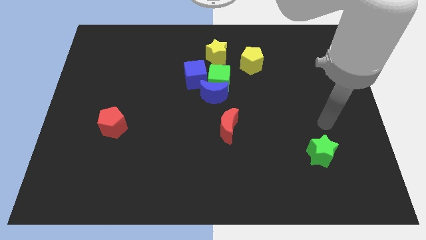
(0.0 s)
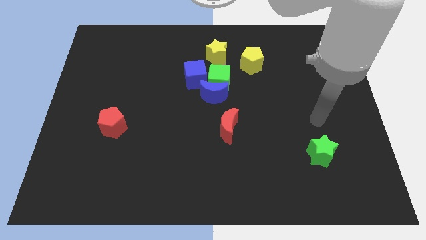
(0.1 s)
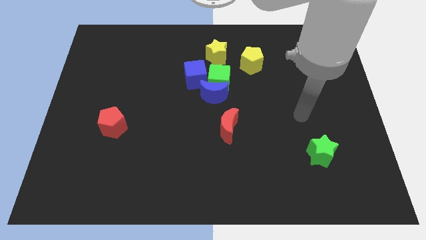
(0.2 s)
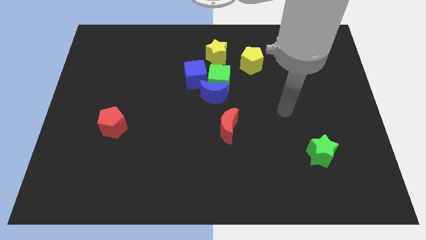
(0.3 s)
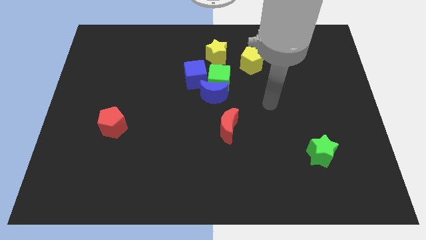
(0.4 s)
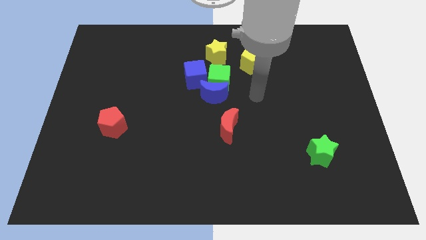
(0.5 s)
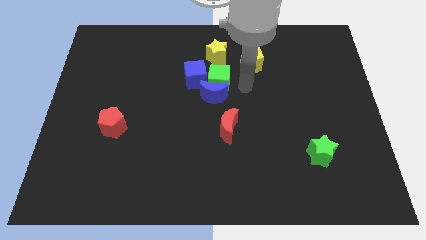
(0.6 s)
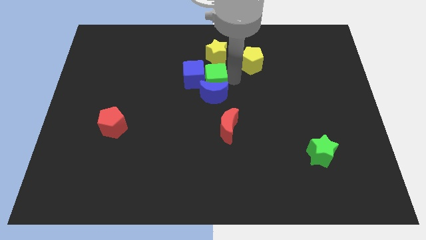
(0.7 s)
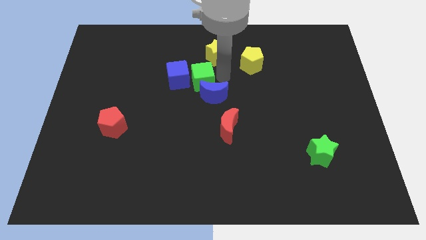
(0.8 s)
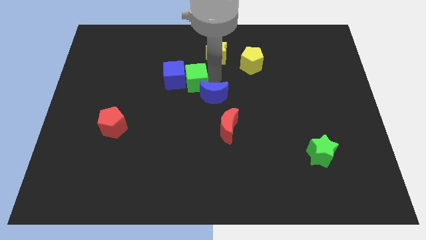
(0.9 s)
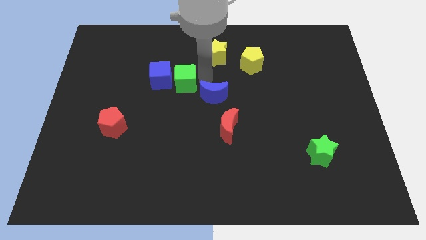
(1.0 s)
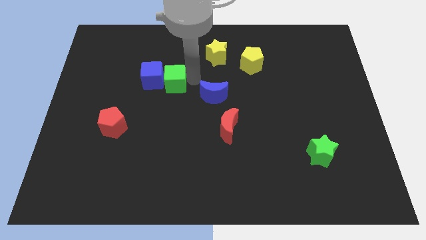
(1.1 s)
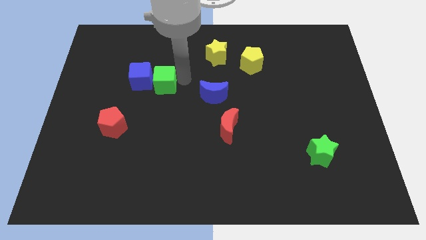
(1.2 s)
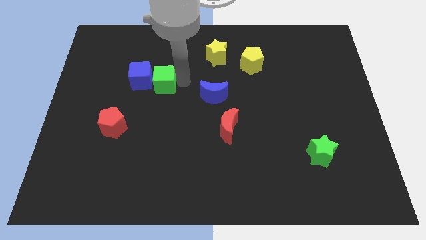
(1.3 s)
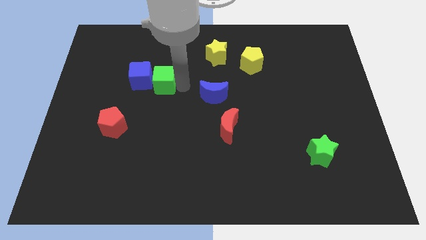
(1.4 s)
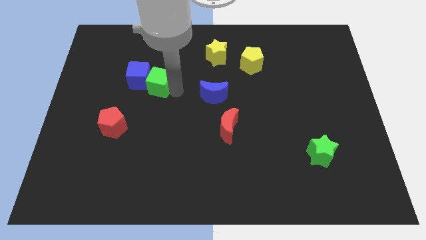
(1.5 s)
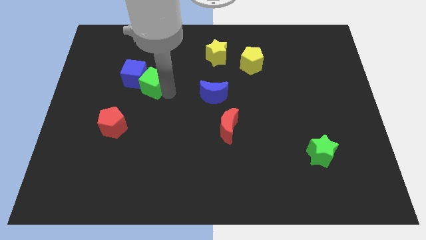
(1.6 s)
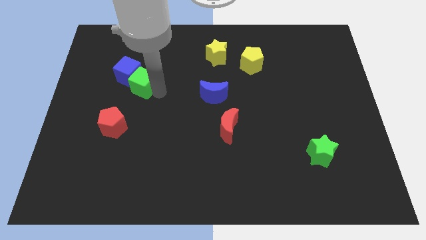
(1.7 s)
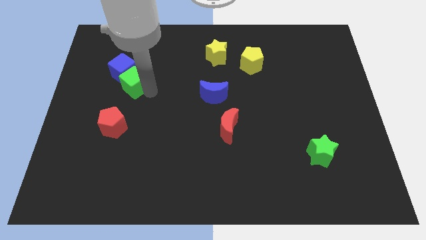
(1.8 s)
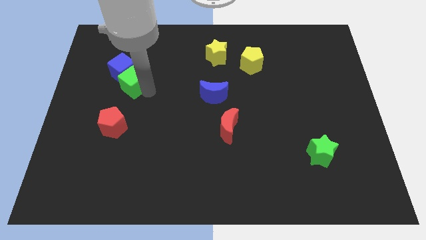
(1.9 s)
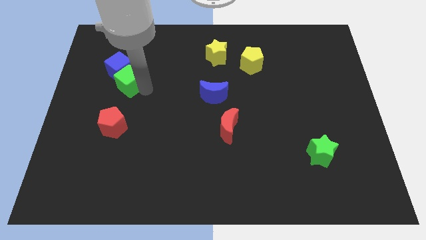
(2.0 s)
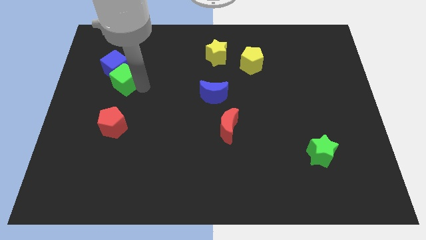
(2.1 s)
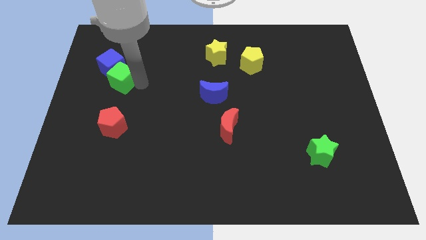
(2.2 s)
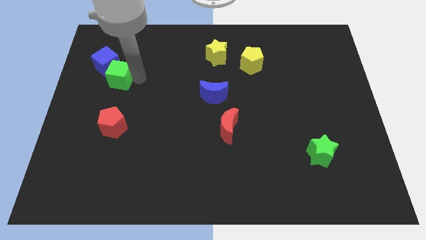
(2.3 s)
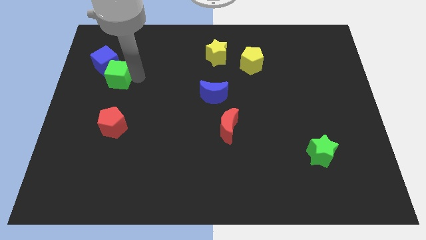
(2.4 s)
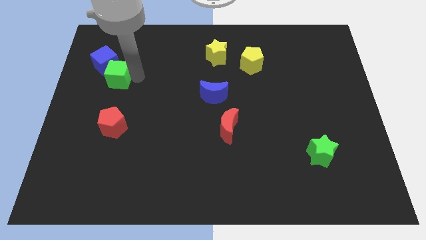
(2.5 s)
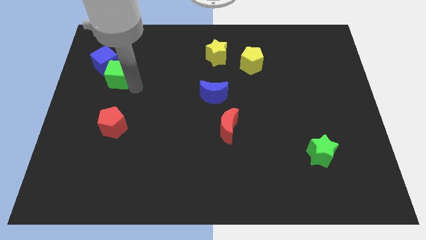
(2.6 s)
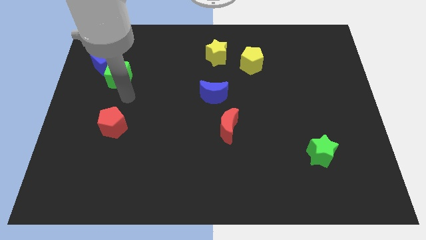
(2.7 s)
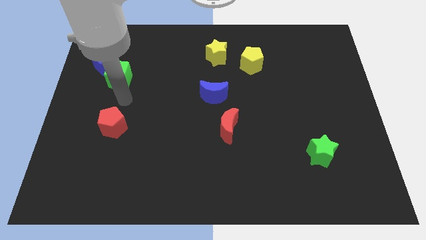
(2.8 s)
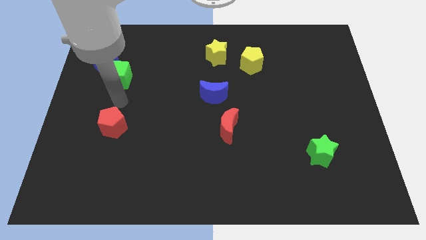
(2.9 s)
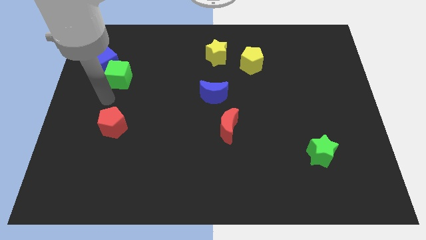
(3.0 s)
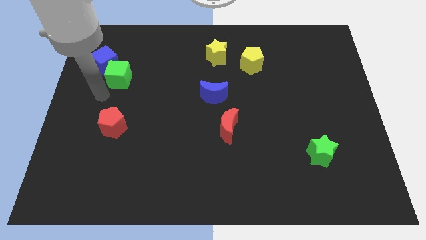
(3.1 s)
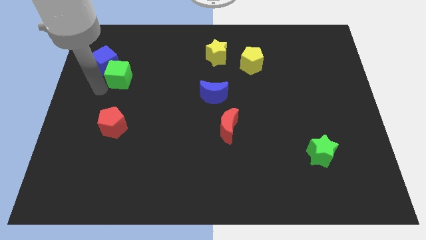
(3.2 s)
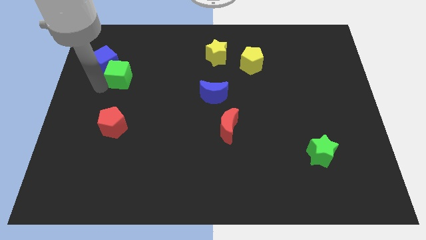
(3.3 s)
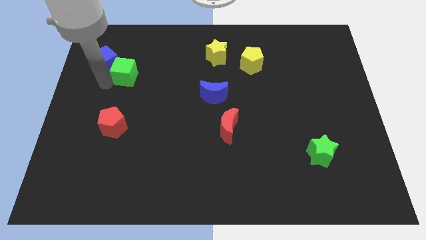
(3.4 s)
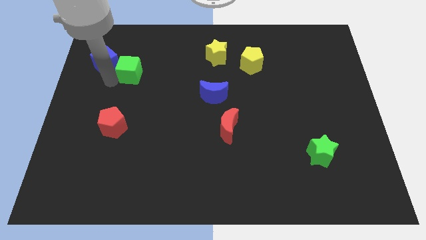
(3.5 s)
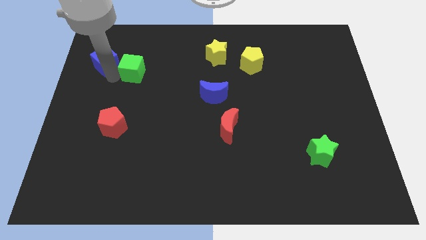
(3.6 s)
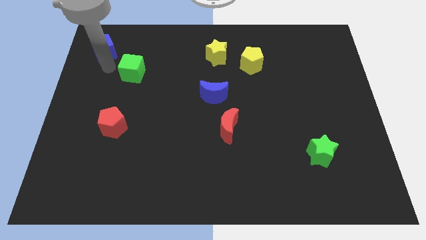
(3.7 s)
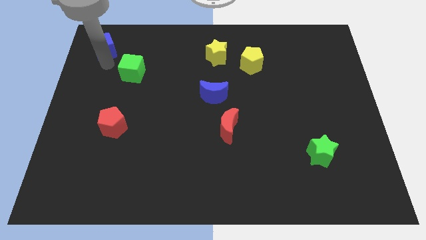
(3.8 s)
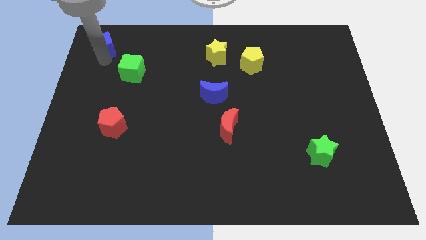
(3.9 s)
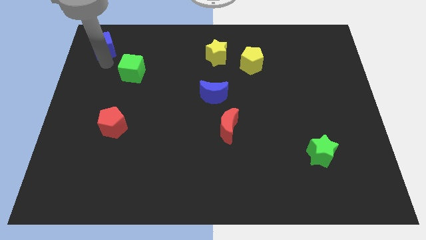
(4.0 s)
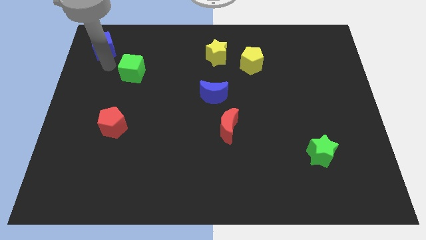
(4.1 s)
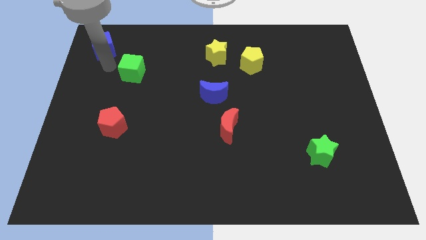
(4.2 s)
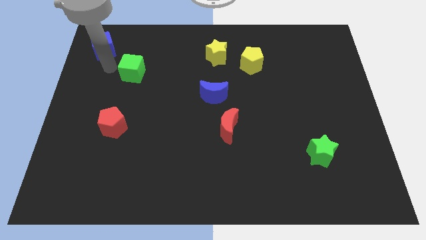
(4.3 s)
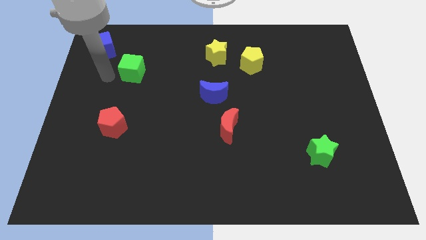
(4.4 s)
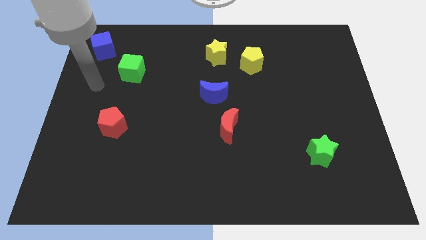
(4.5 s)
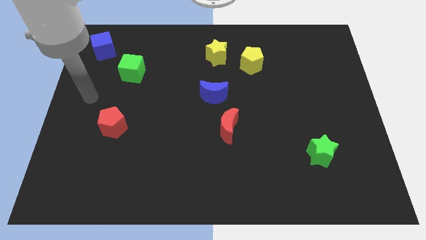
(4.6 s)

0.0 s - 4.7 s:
separate the green cube and the blue cube

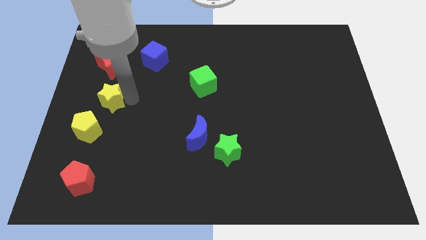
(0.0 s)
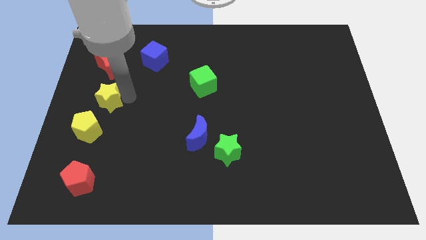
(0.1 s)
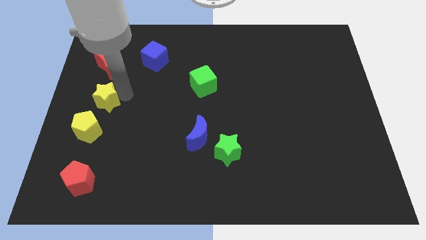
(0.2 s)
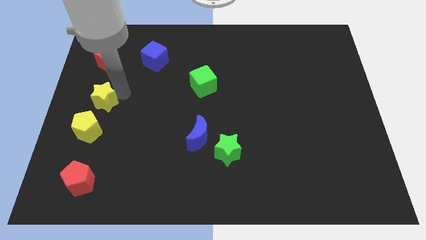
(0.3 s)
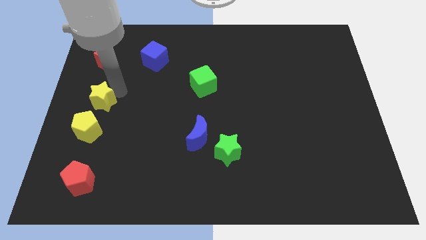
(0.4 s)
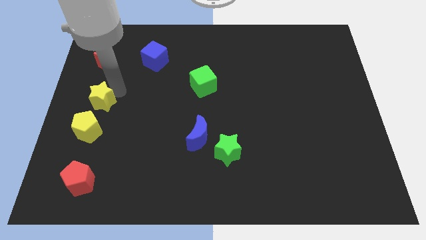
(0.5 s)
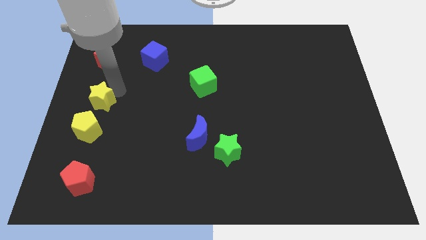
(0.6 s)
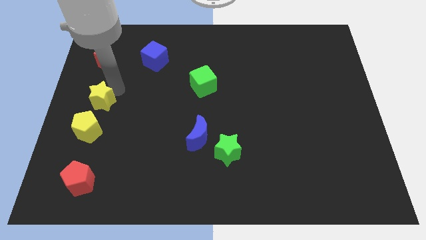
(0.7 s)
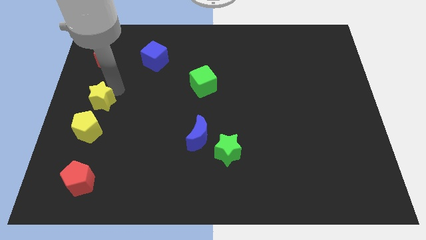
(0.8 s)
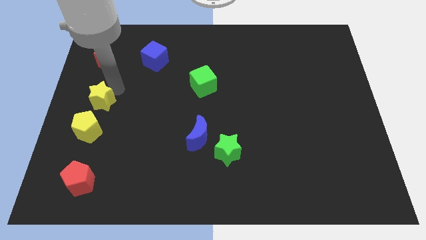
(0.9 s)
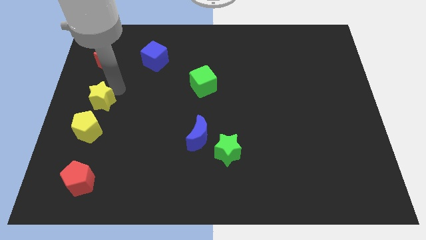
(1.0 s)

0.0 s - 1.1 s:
slightly push the yellow star above the yellow pentagon

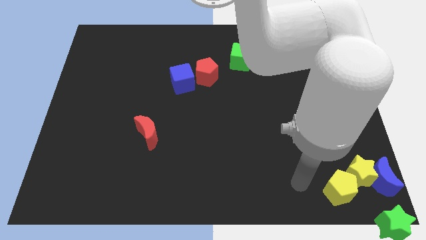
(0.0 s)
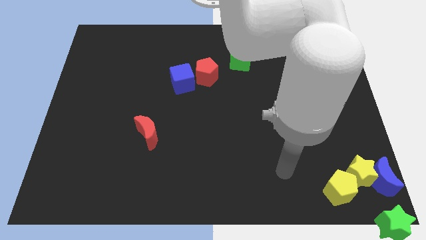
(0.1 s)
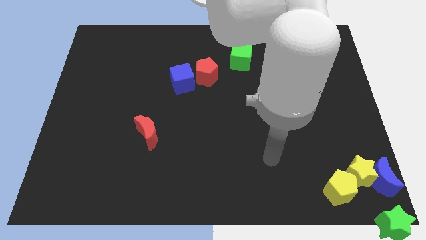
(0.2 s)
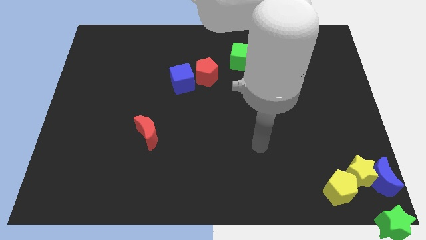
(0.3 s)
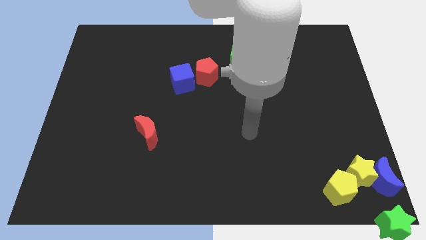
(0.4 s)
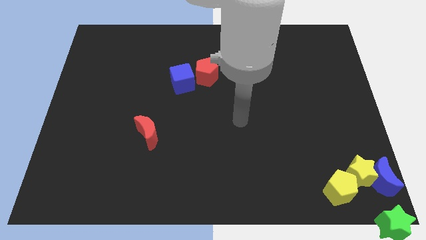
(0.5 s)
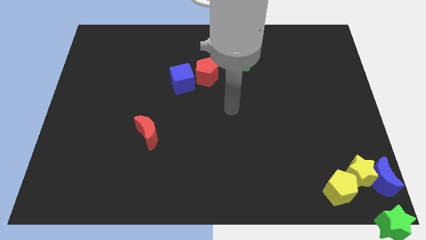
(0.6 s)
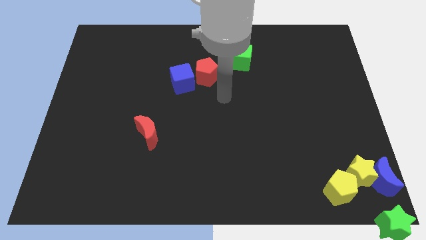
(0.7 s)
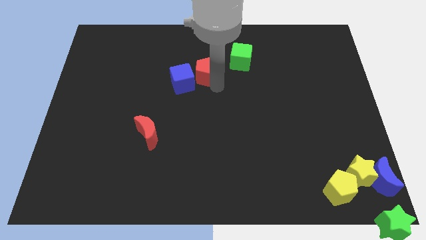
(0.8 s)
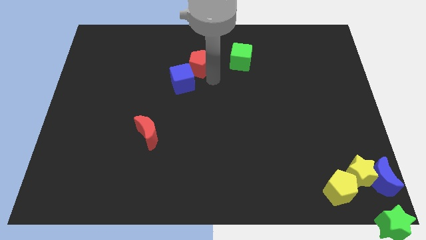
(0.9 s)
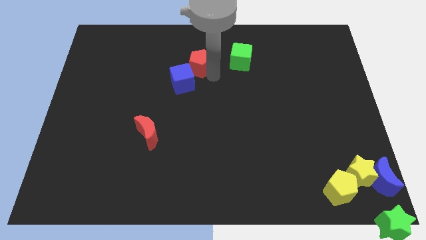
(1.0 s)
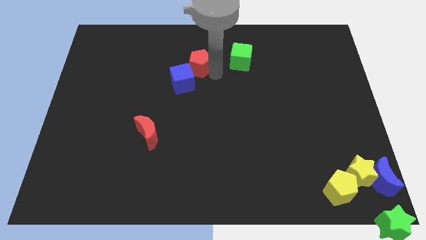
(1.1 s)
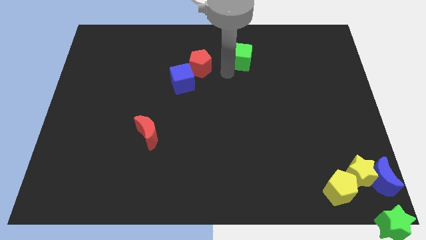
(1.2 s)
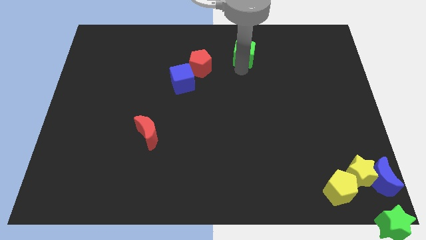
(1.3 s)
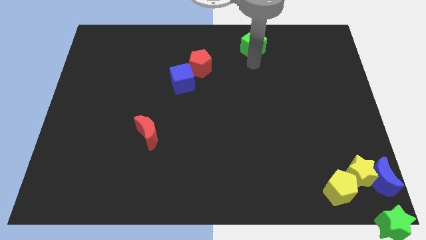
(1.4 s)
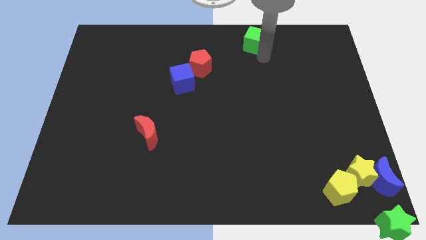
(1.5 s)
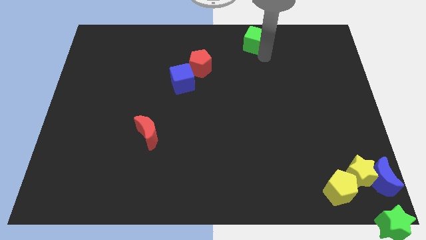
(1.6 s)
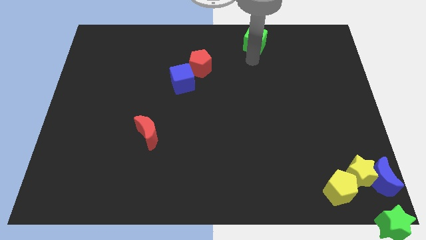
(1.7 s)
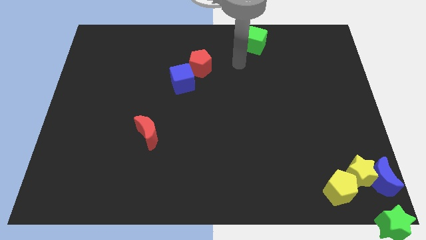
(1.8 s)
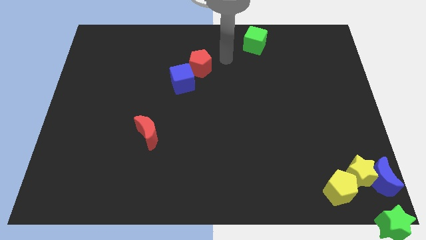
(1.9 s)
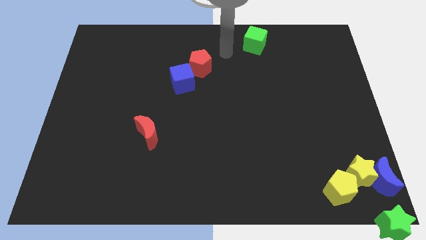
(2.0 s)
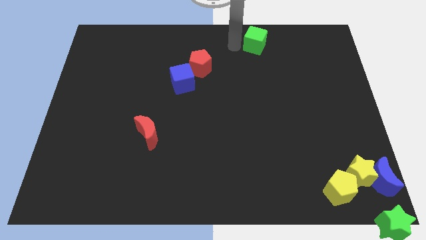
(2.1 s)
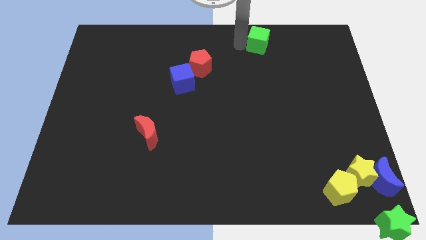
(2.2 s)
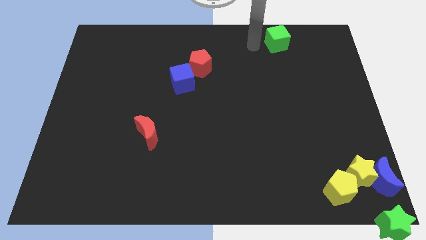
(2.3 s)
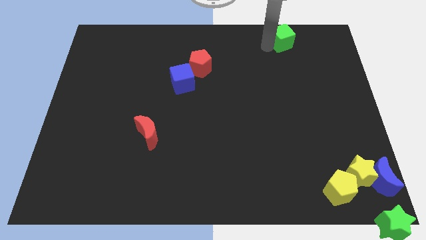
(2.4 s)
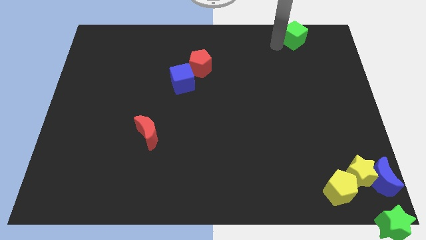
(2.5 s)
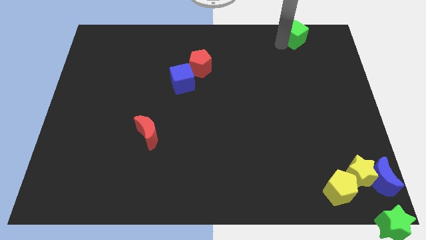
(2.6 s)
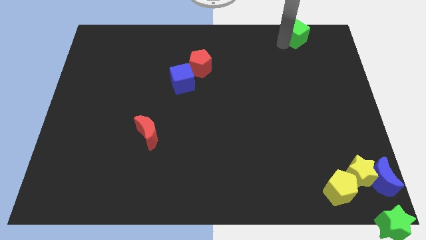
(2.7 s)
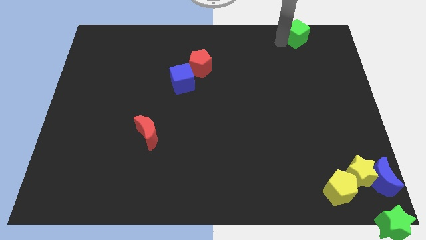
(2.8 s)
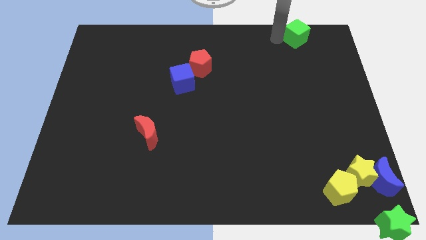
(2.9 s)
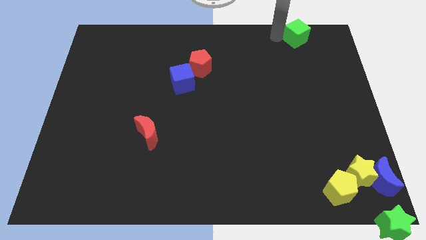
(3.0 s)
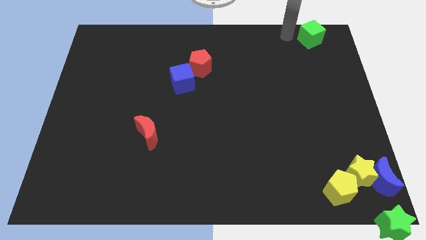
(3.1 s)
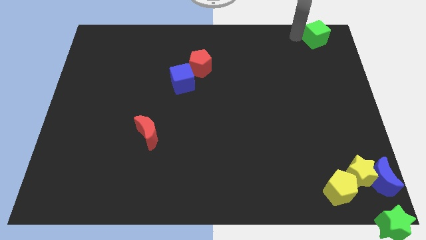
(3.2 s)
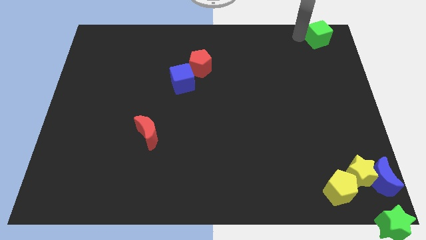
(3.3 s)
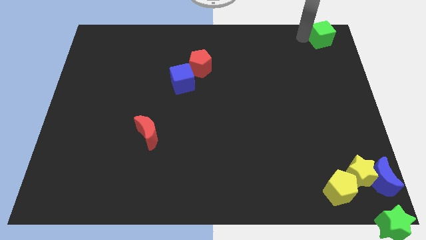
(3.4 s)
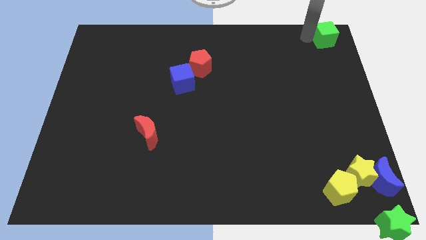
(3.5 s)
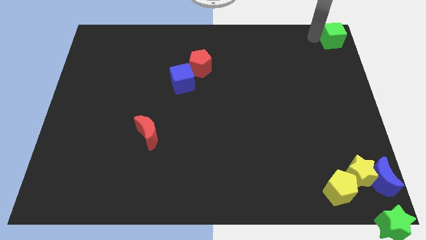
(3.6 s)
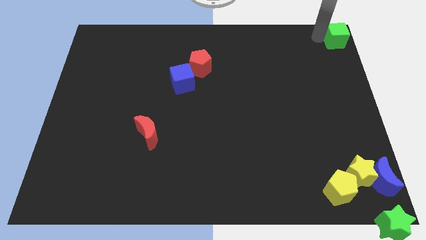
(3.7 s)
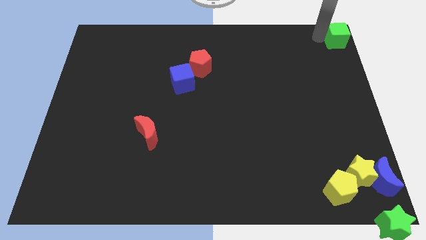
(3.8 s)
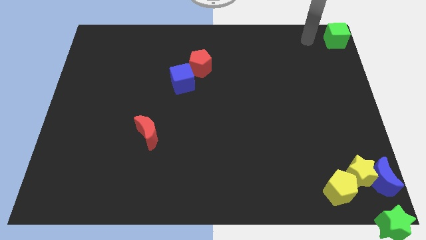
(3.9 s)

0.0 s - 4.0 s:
slide the green cube to the top right side of the board
